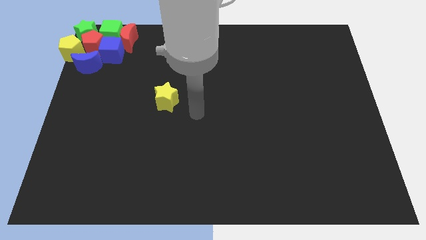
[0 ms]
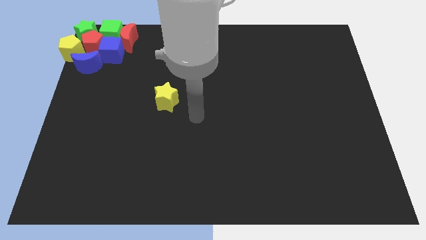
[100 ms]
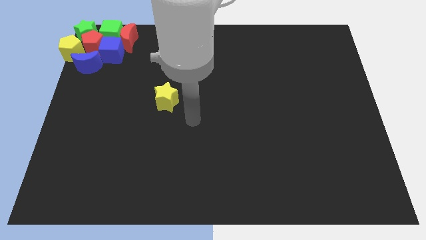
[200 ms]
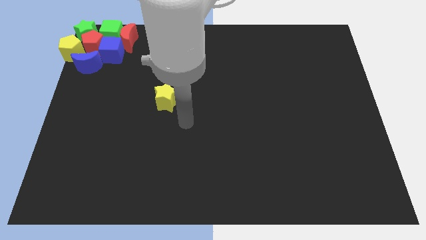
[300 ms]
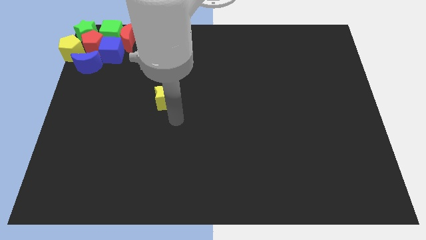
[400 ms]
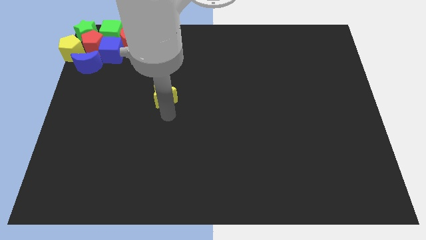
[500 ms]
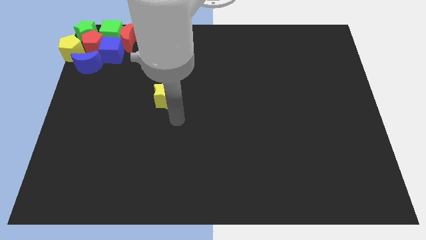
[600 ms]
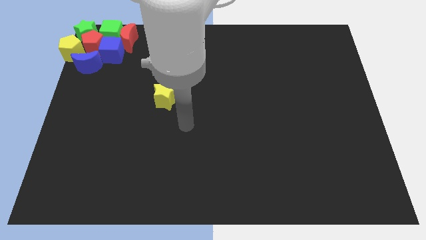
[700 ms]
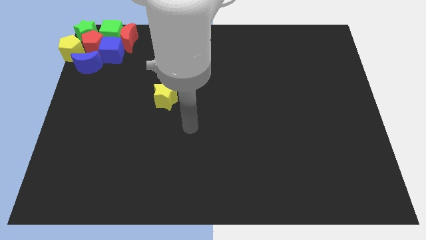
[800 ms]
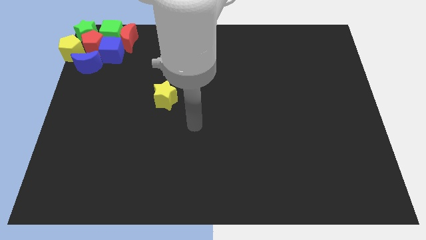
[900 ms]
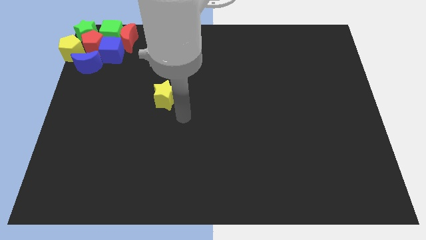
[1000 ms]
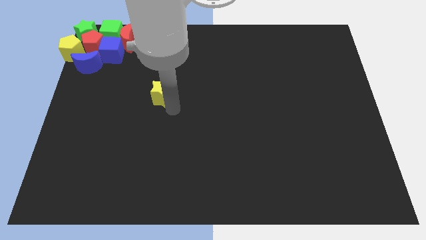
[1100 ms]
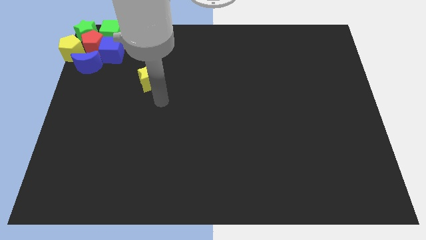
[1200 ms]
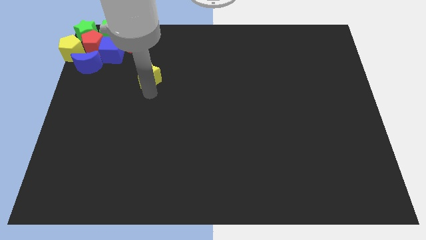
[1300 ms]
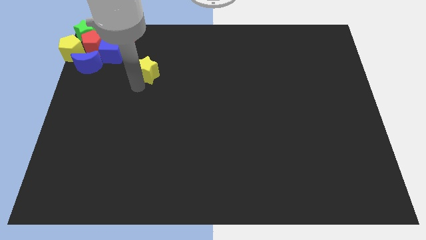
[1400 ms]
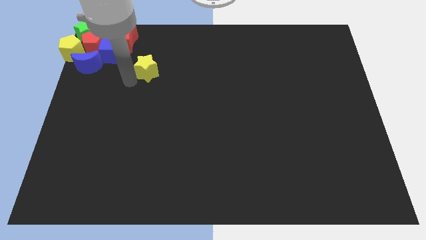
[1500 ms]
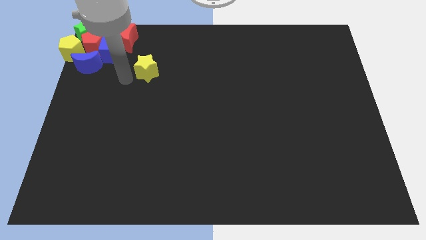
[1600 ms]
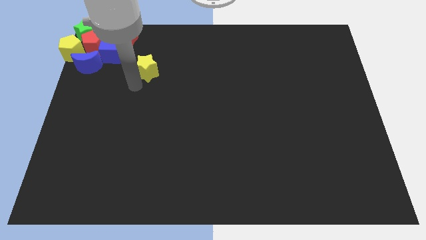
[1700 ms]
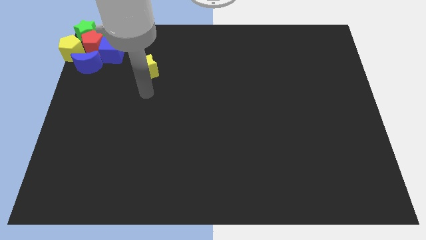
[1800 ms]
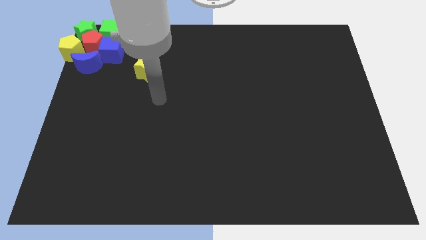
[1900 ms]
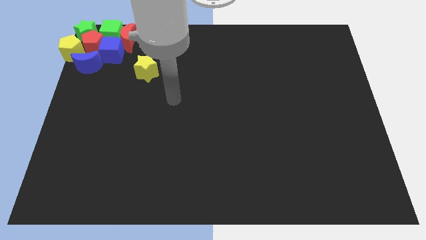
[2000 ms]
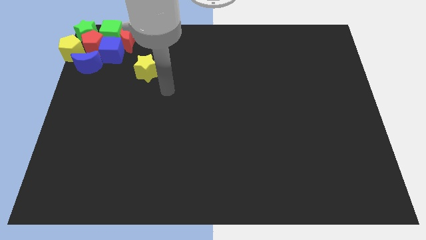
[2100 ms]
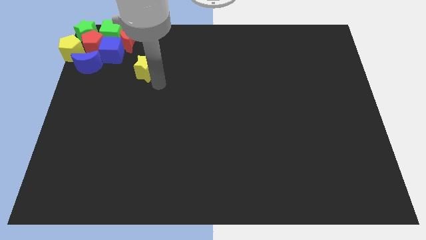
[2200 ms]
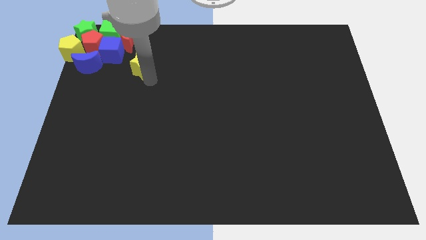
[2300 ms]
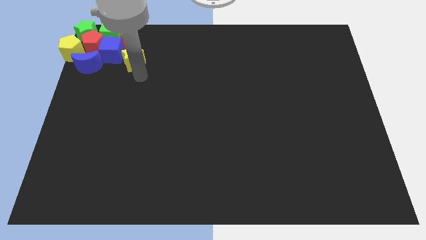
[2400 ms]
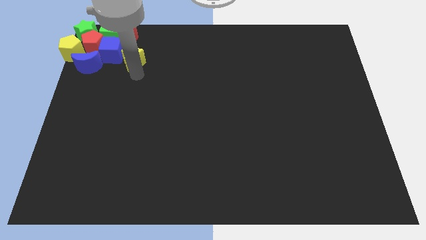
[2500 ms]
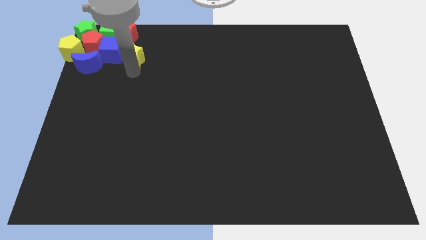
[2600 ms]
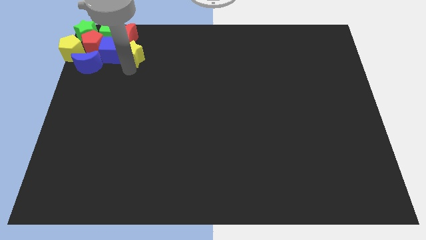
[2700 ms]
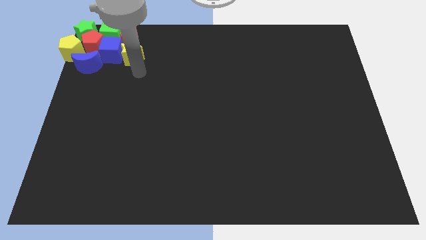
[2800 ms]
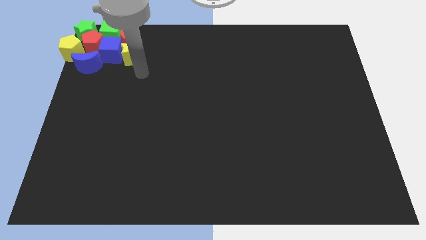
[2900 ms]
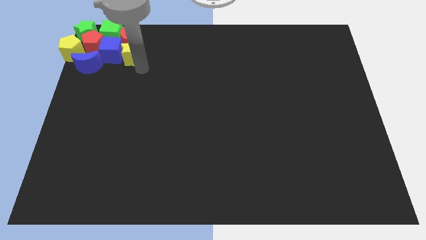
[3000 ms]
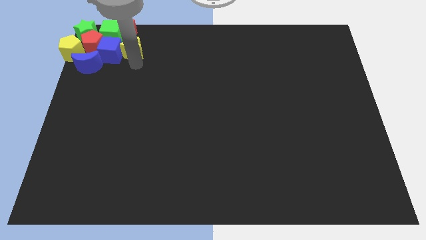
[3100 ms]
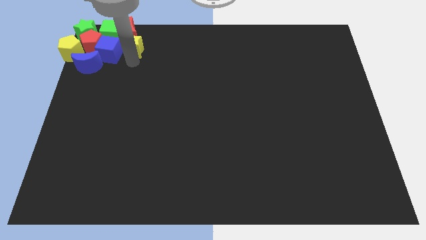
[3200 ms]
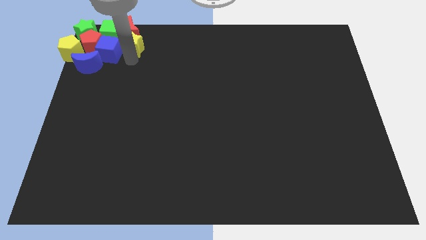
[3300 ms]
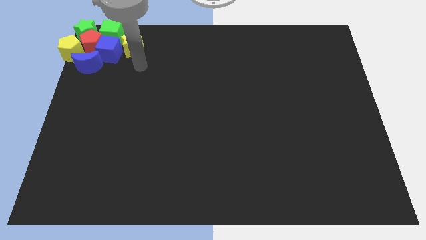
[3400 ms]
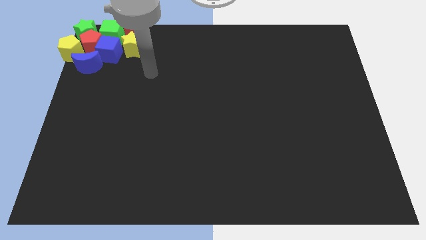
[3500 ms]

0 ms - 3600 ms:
push the yellow star into a group of blocks

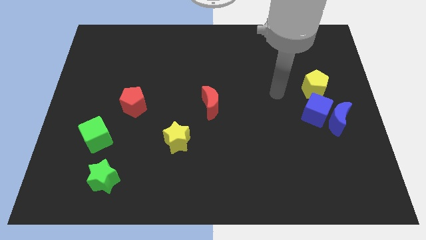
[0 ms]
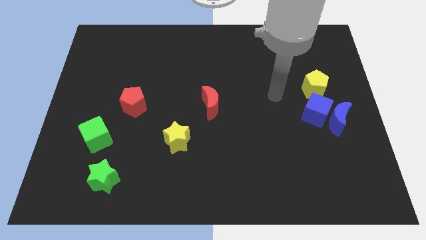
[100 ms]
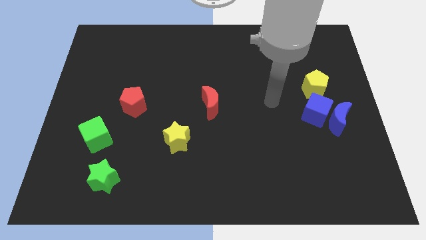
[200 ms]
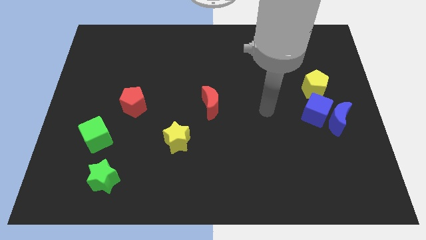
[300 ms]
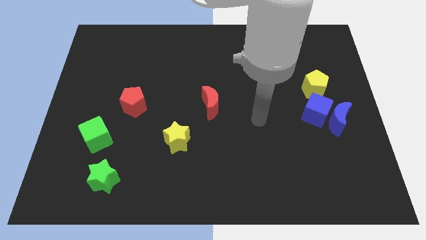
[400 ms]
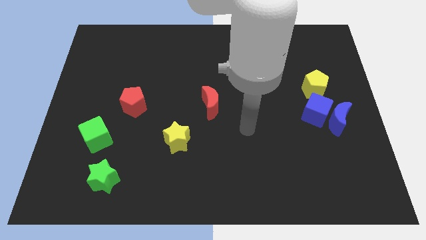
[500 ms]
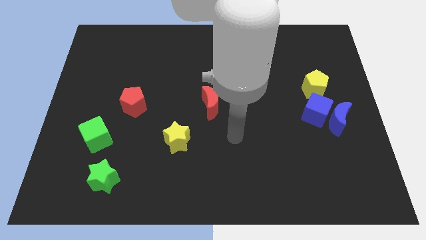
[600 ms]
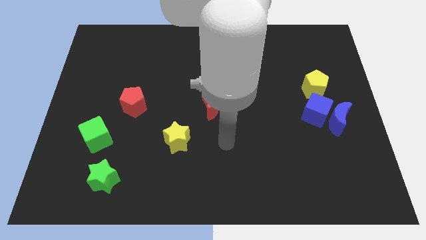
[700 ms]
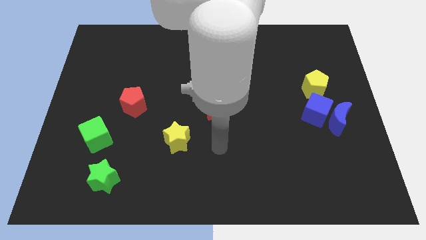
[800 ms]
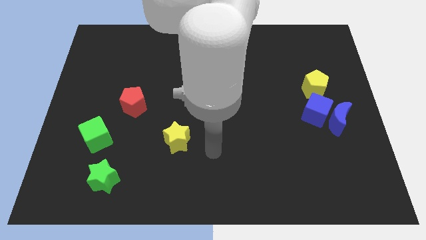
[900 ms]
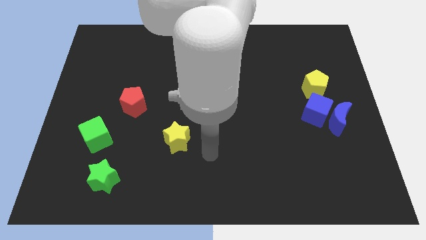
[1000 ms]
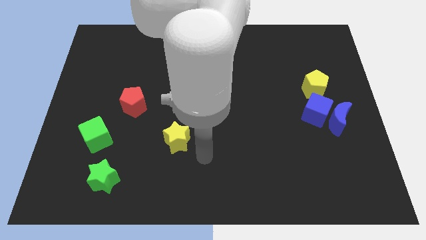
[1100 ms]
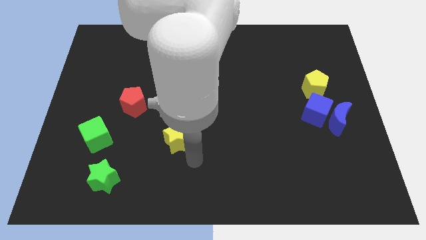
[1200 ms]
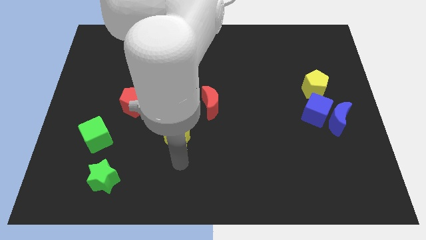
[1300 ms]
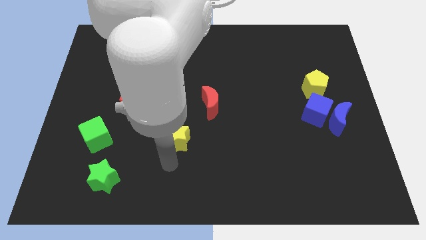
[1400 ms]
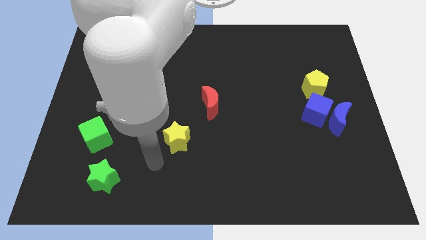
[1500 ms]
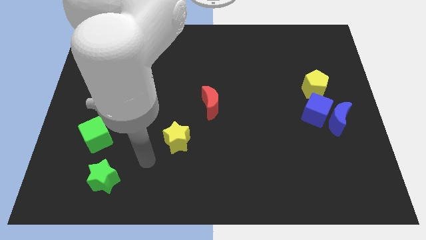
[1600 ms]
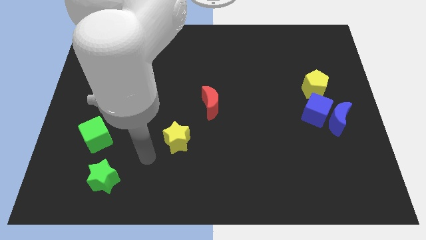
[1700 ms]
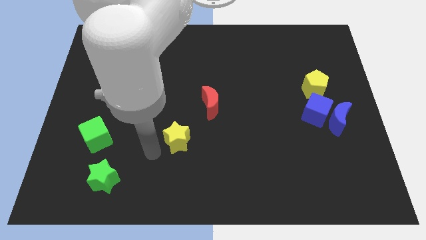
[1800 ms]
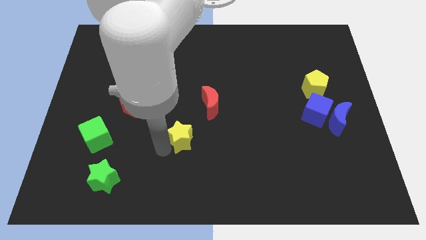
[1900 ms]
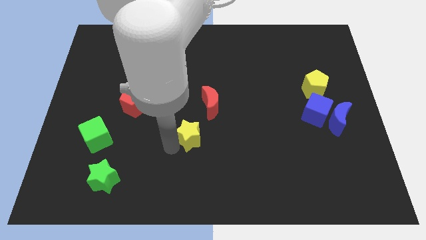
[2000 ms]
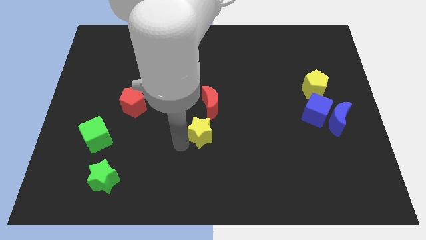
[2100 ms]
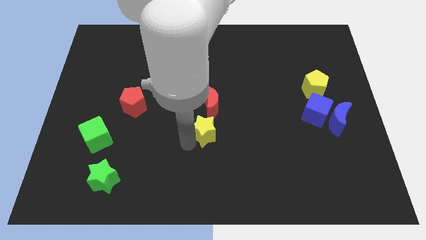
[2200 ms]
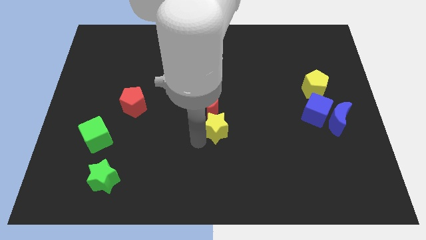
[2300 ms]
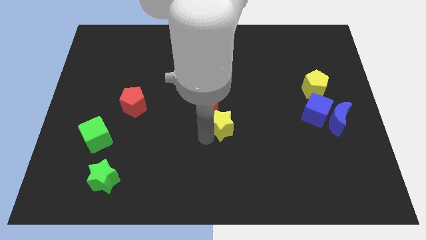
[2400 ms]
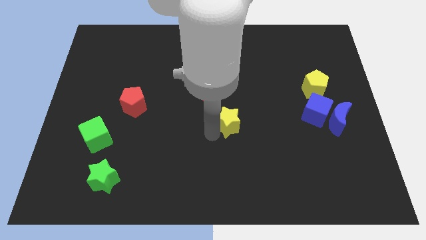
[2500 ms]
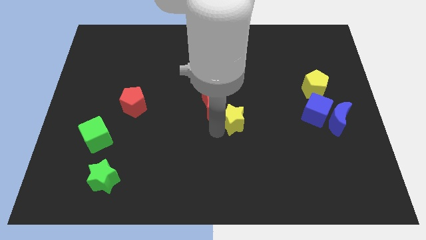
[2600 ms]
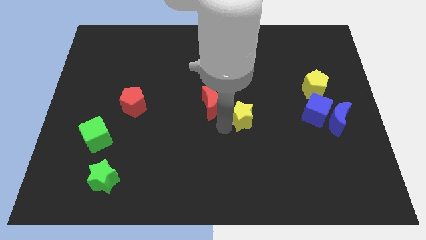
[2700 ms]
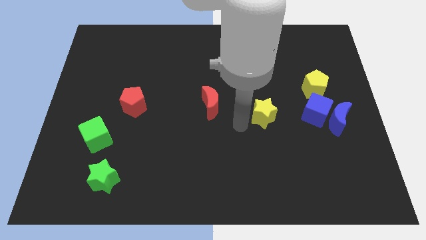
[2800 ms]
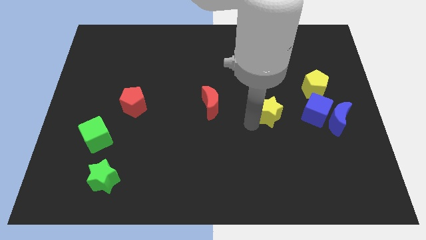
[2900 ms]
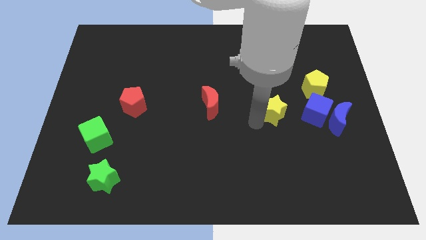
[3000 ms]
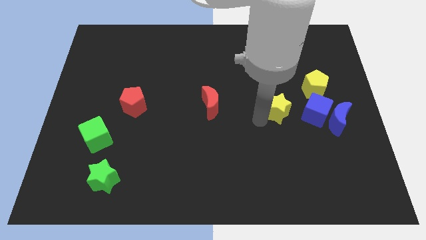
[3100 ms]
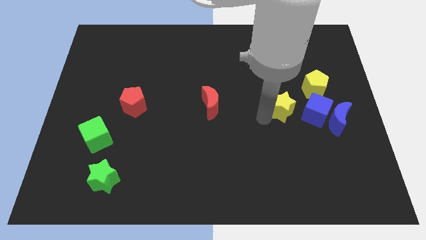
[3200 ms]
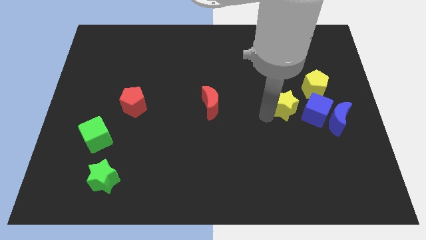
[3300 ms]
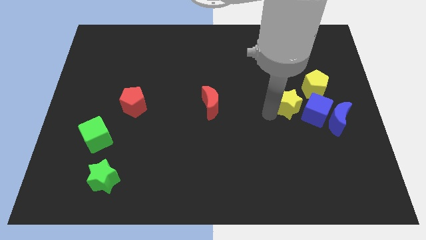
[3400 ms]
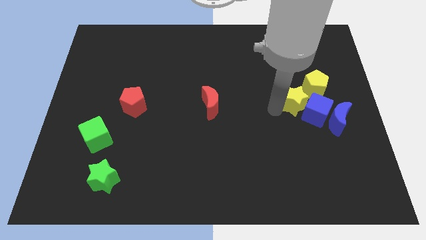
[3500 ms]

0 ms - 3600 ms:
move the yellow star towards the left of blue cube

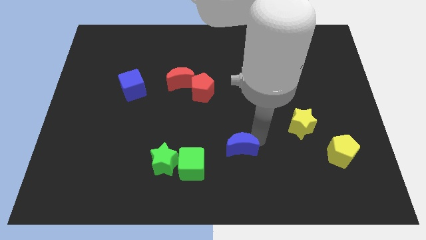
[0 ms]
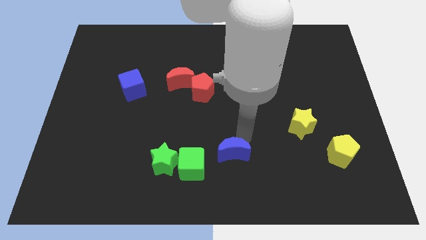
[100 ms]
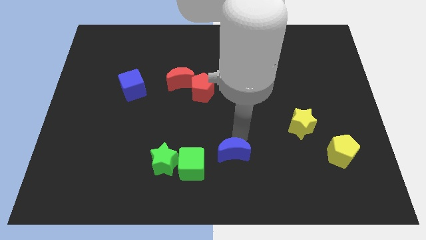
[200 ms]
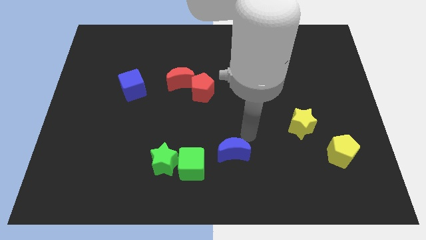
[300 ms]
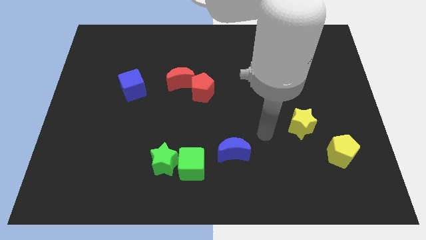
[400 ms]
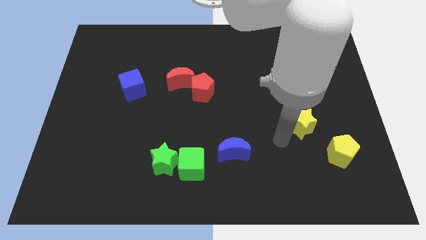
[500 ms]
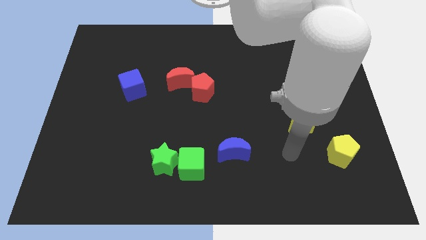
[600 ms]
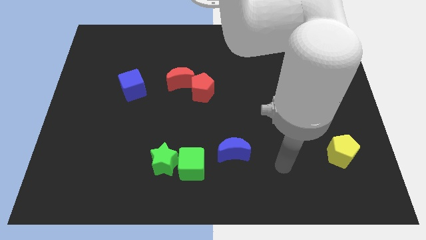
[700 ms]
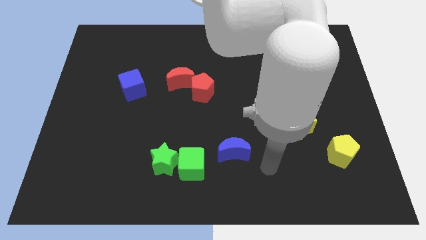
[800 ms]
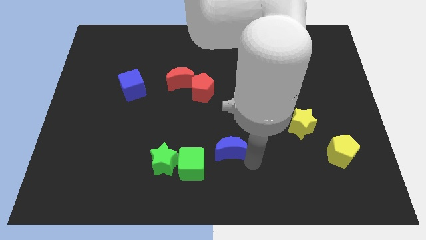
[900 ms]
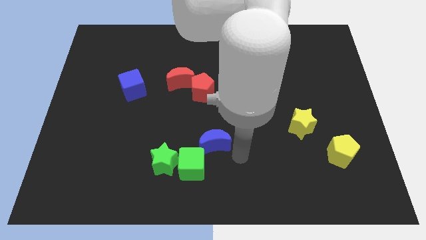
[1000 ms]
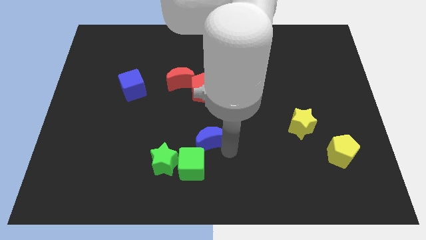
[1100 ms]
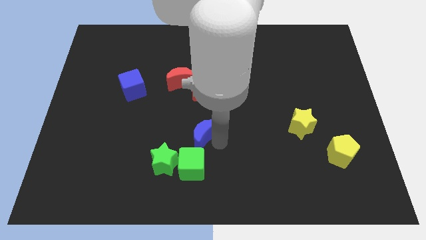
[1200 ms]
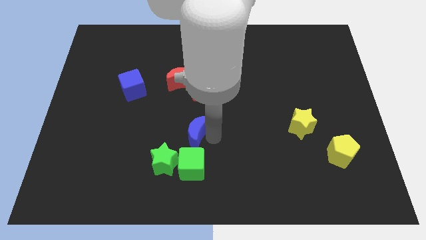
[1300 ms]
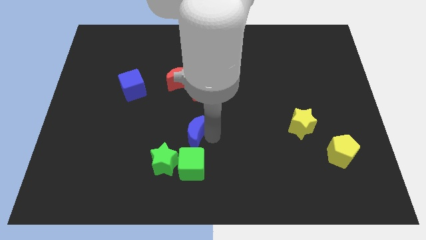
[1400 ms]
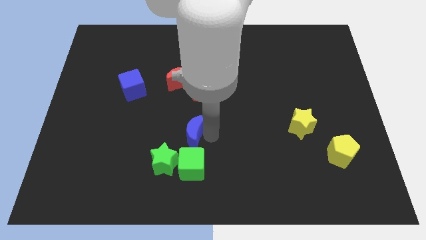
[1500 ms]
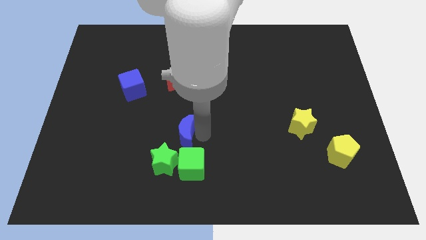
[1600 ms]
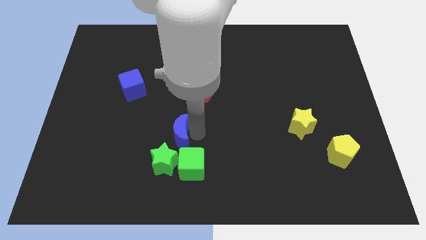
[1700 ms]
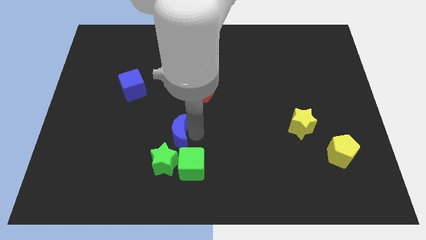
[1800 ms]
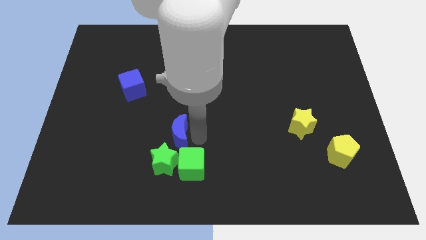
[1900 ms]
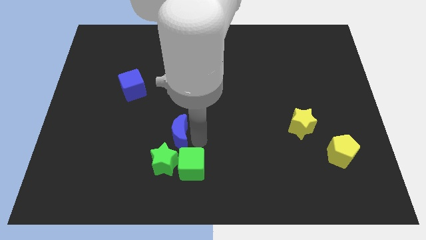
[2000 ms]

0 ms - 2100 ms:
place blue moon to top right of green star
